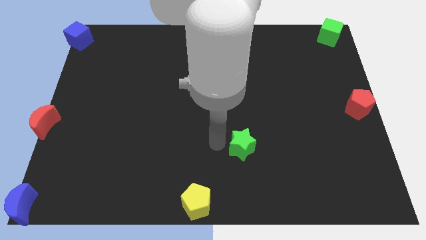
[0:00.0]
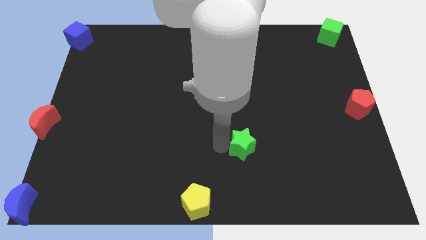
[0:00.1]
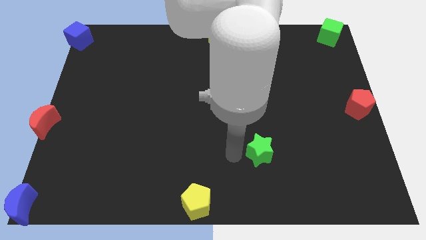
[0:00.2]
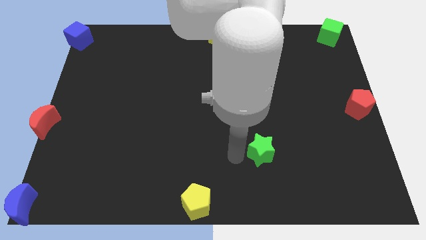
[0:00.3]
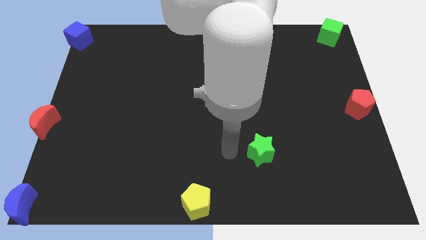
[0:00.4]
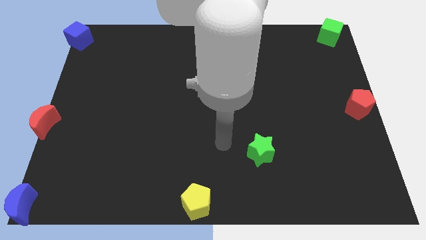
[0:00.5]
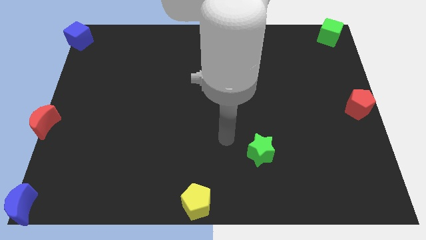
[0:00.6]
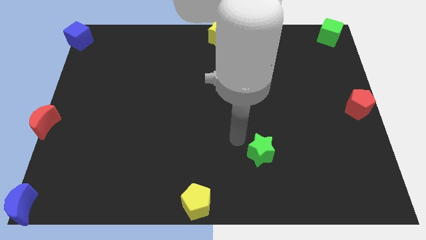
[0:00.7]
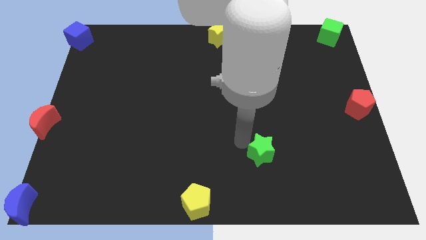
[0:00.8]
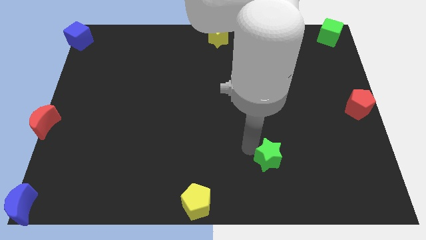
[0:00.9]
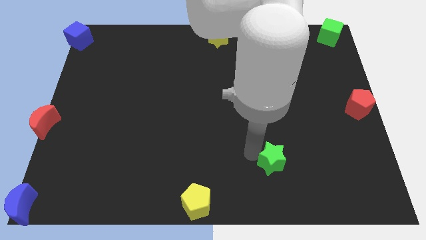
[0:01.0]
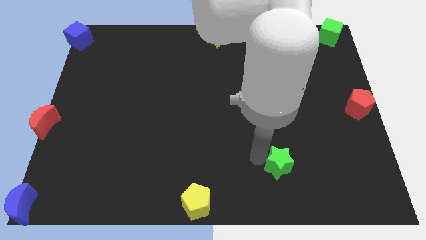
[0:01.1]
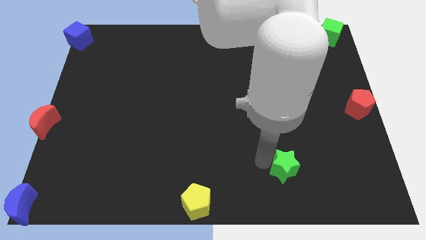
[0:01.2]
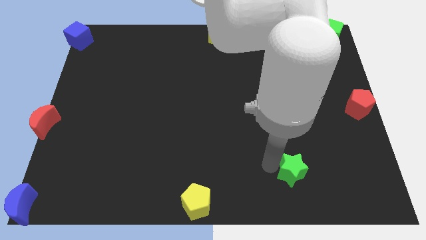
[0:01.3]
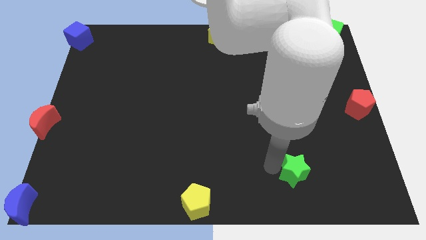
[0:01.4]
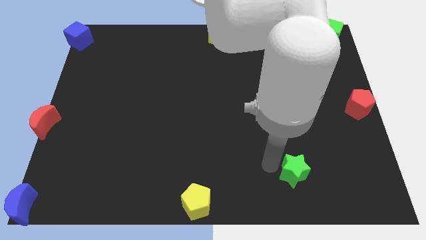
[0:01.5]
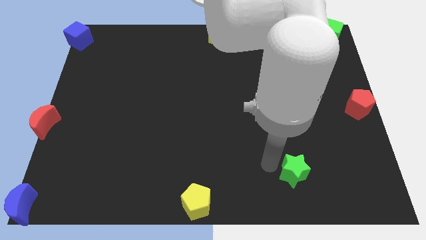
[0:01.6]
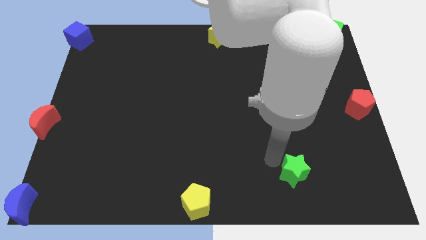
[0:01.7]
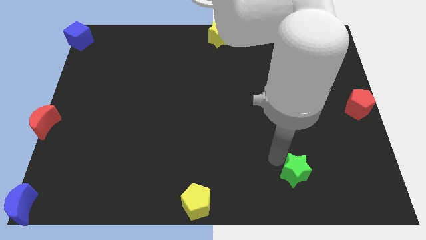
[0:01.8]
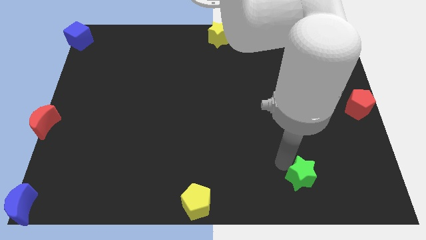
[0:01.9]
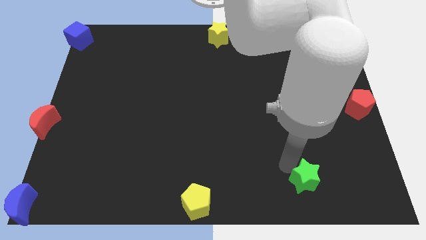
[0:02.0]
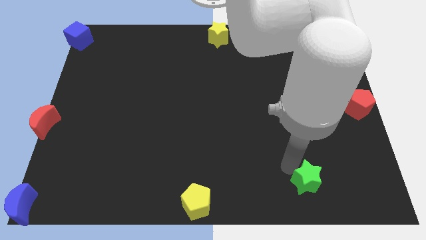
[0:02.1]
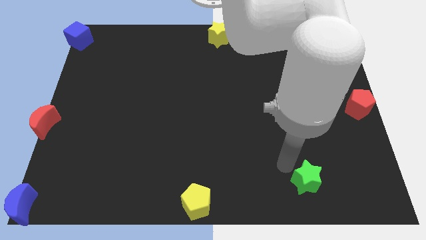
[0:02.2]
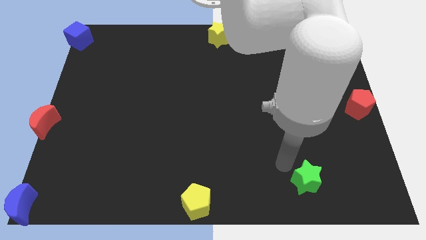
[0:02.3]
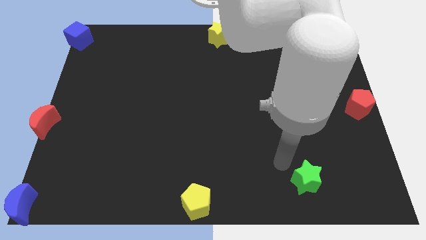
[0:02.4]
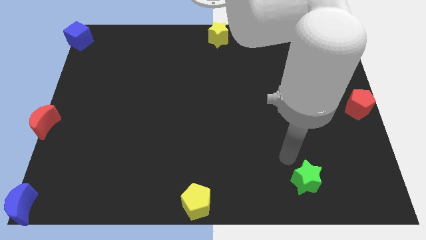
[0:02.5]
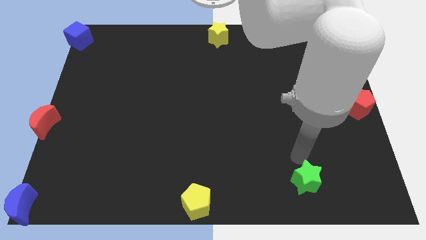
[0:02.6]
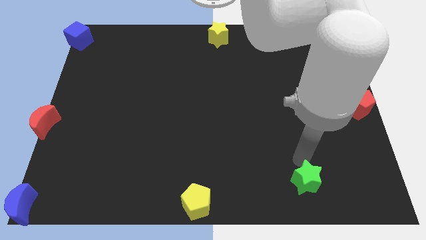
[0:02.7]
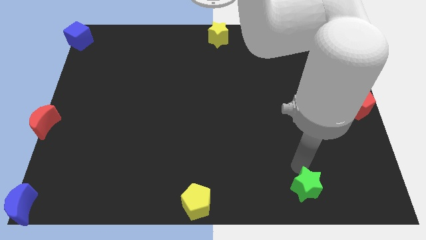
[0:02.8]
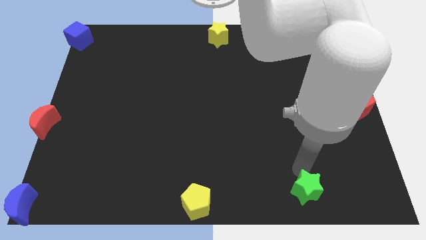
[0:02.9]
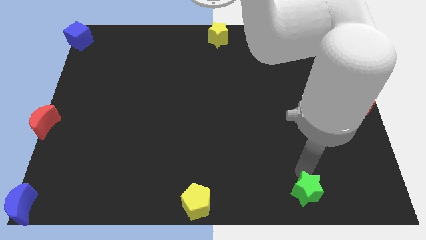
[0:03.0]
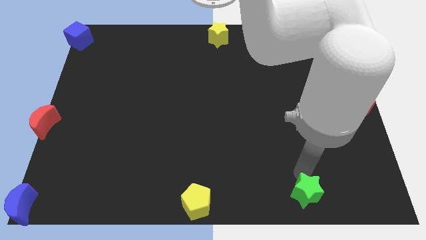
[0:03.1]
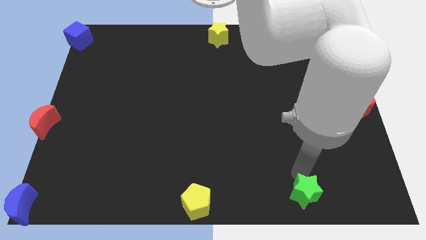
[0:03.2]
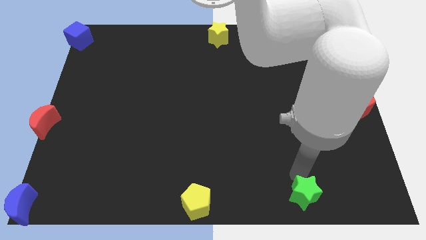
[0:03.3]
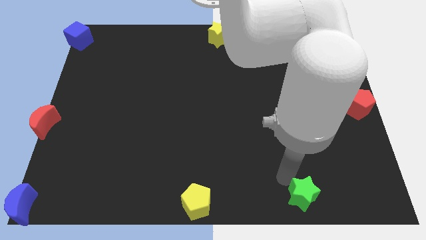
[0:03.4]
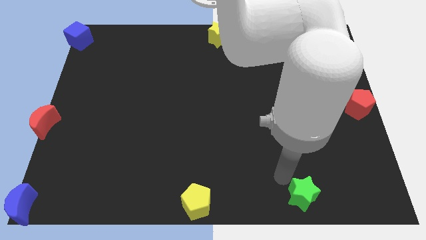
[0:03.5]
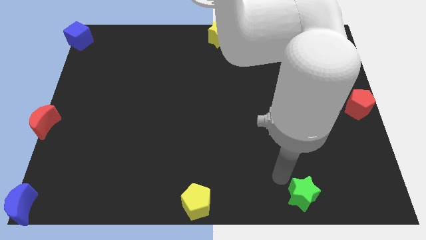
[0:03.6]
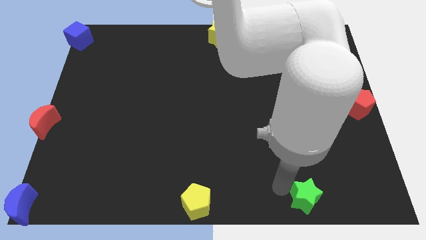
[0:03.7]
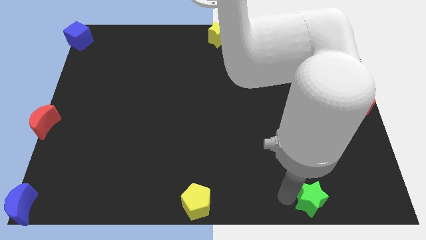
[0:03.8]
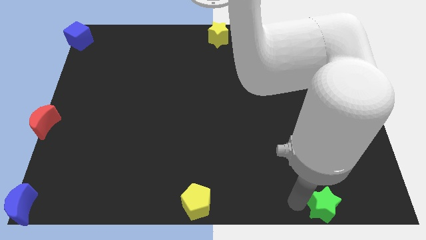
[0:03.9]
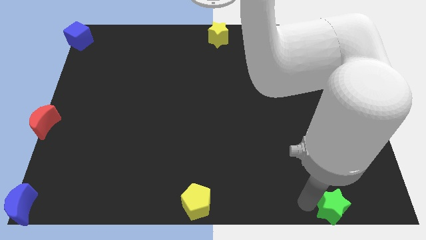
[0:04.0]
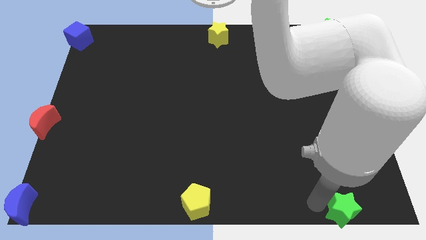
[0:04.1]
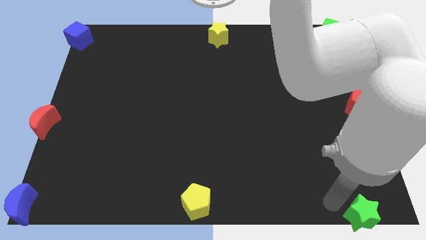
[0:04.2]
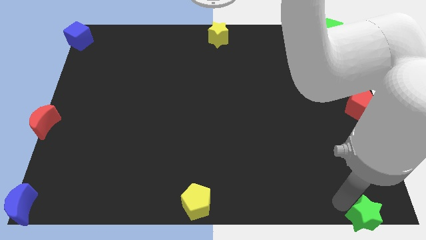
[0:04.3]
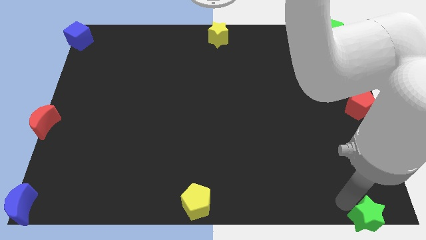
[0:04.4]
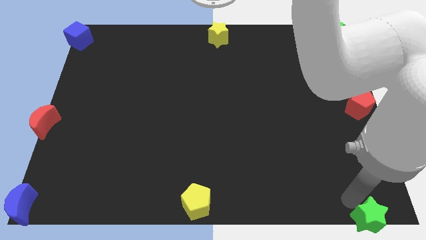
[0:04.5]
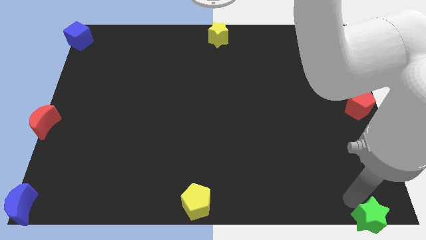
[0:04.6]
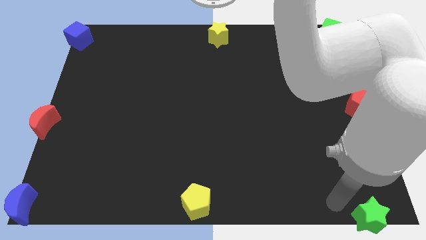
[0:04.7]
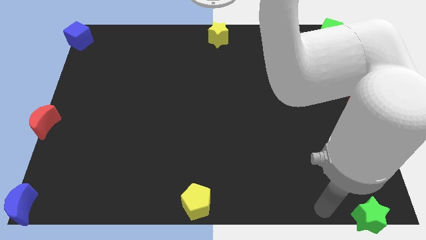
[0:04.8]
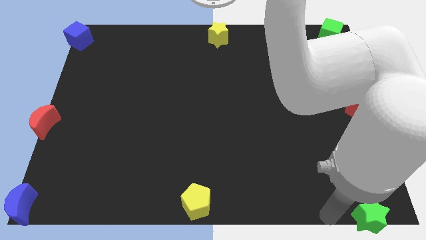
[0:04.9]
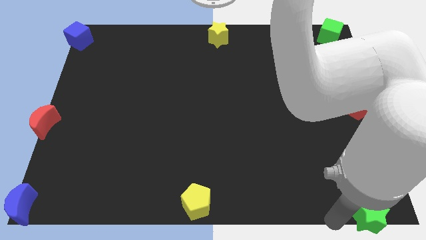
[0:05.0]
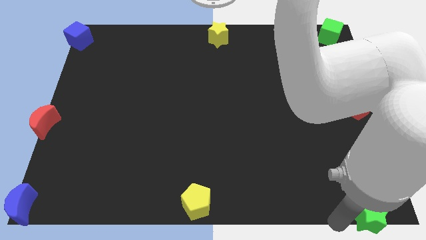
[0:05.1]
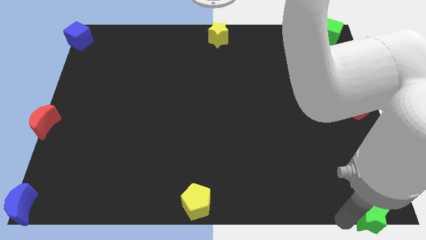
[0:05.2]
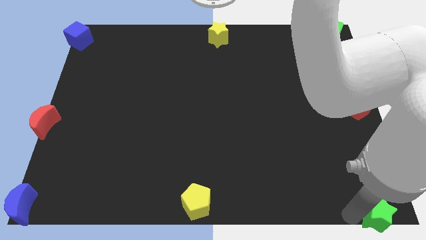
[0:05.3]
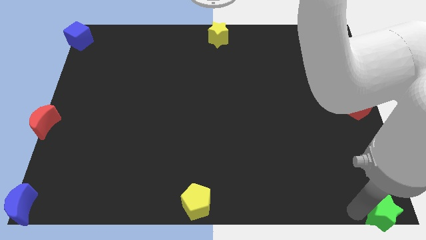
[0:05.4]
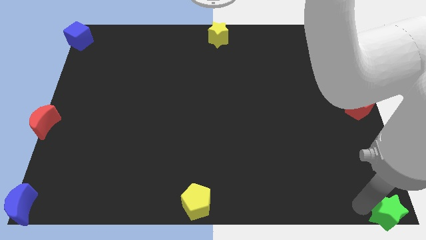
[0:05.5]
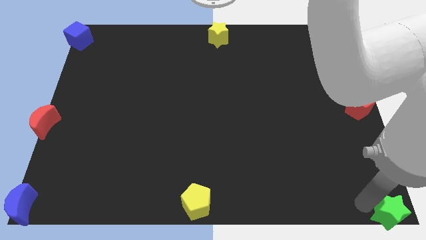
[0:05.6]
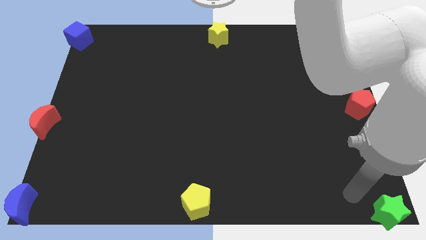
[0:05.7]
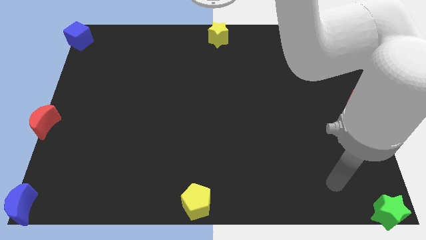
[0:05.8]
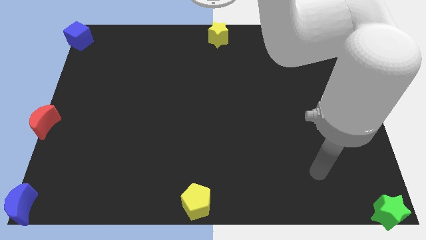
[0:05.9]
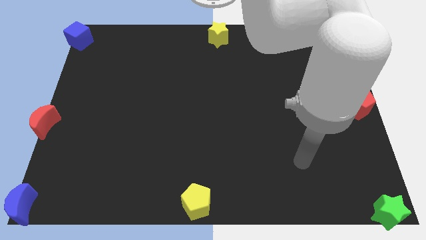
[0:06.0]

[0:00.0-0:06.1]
push the green star to the bottom right corner of the board

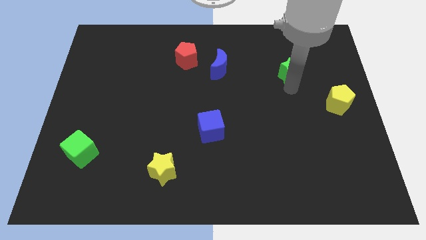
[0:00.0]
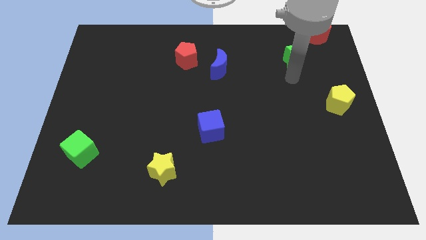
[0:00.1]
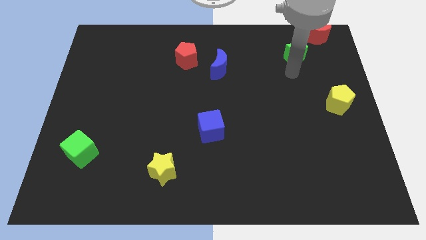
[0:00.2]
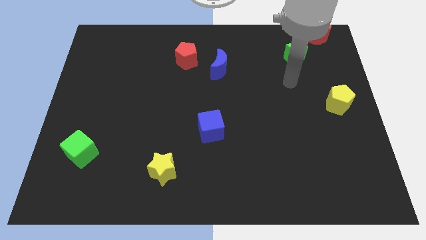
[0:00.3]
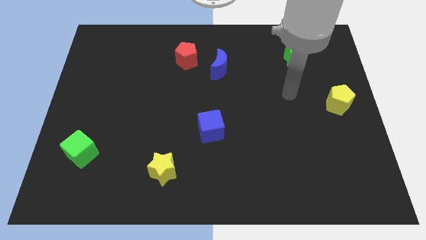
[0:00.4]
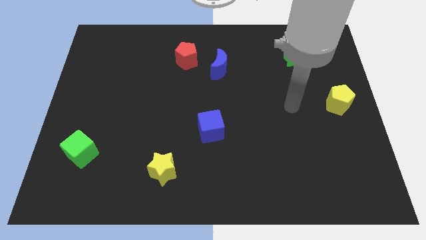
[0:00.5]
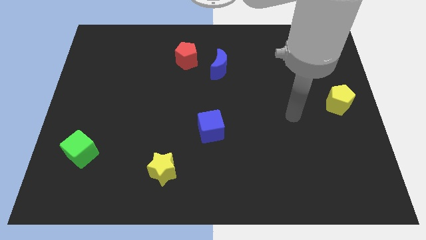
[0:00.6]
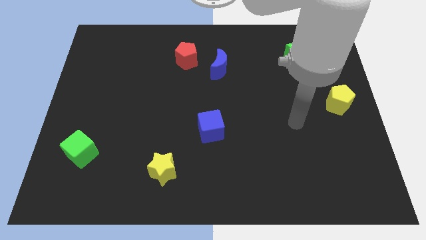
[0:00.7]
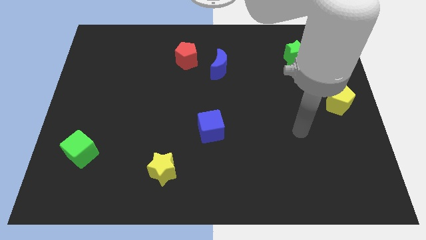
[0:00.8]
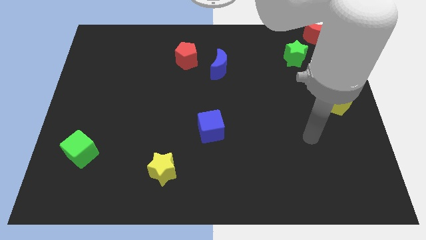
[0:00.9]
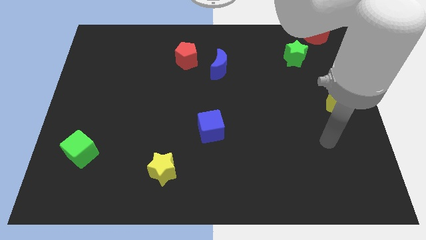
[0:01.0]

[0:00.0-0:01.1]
push green star towards red moon

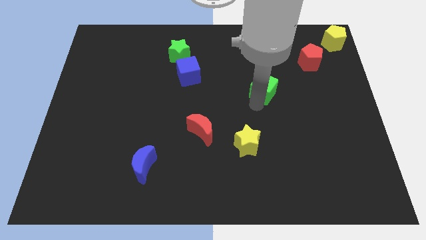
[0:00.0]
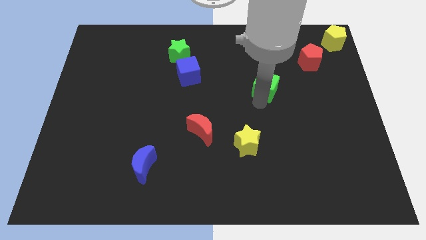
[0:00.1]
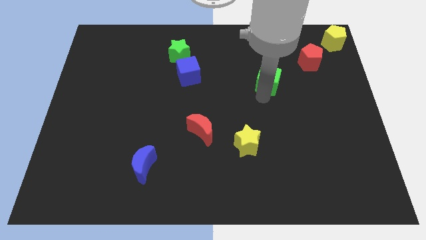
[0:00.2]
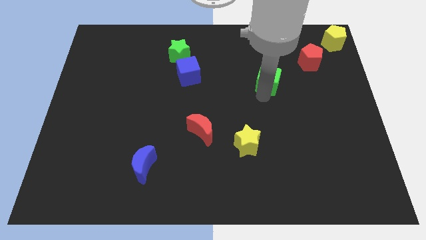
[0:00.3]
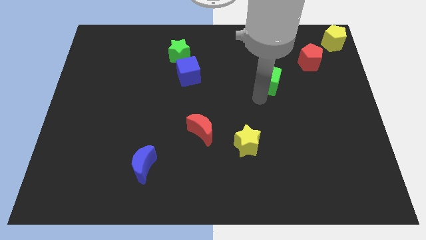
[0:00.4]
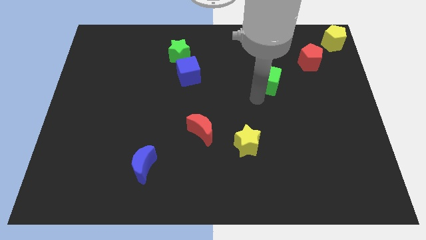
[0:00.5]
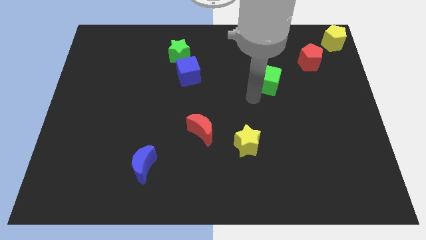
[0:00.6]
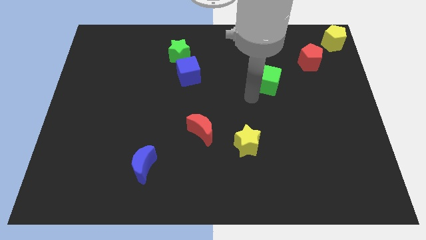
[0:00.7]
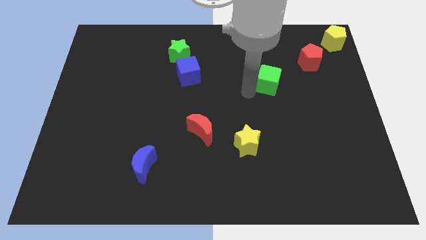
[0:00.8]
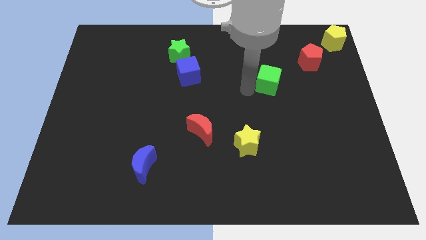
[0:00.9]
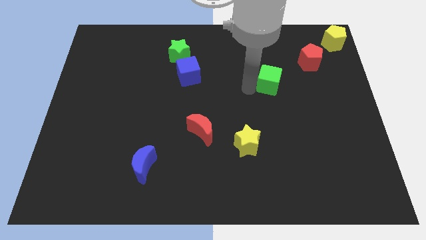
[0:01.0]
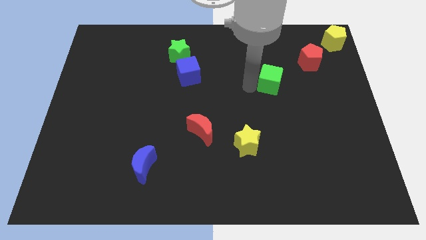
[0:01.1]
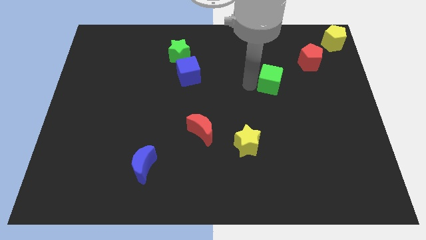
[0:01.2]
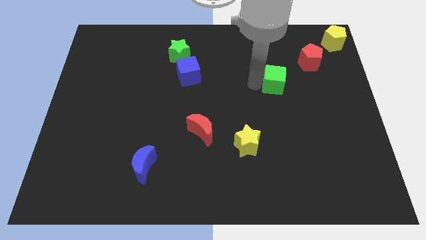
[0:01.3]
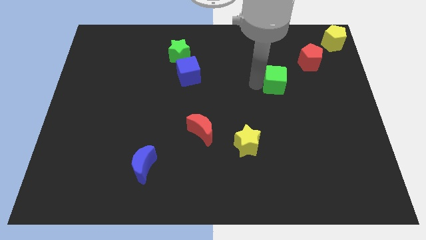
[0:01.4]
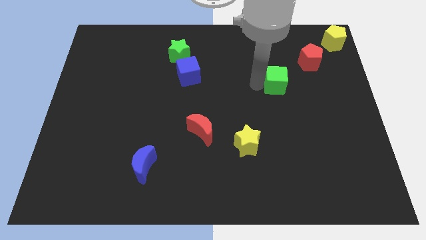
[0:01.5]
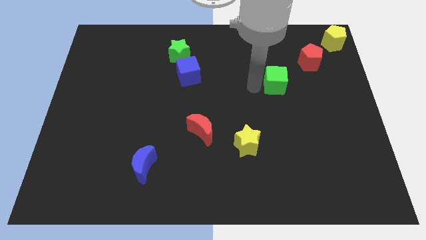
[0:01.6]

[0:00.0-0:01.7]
move the green cube between red pentagon and yellow star
